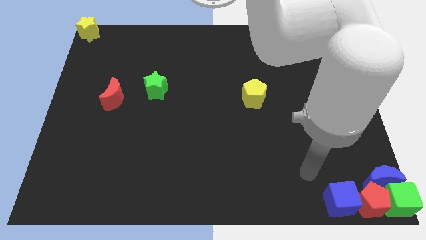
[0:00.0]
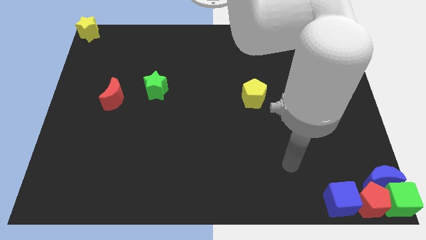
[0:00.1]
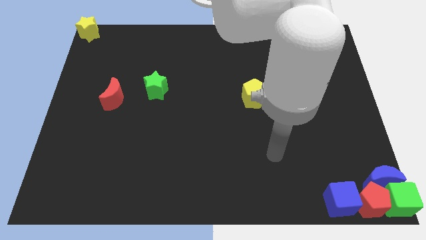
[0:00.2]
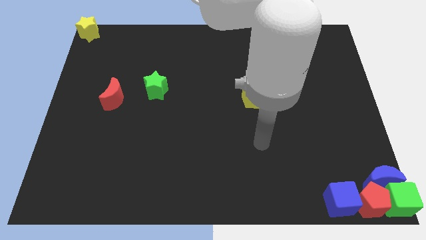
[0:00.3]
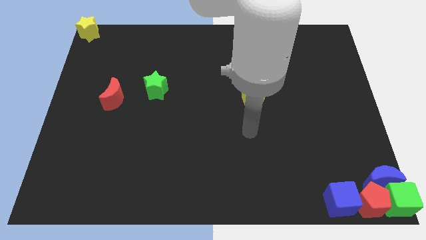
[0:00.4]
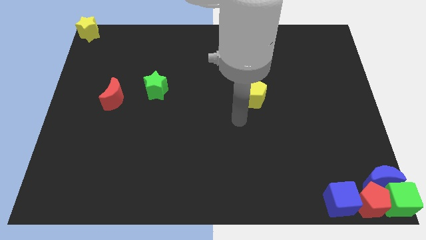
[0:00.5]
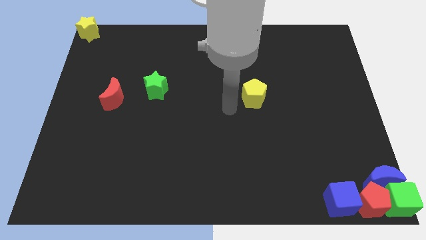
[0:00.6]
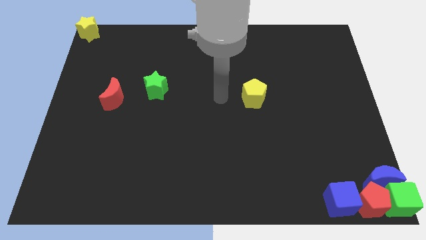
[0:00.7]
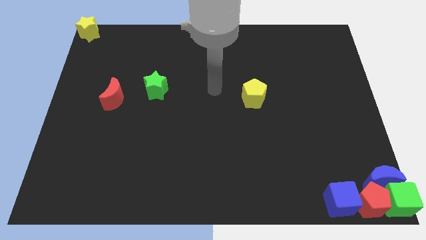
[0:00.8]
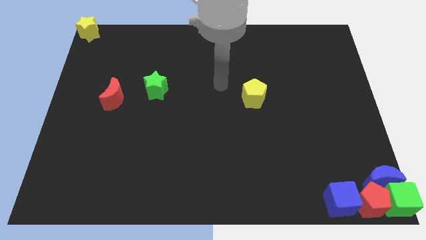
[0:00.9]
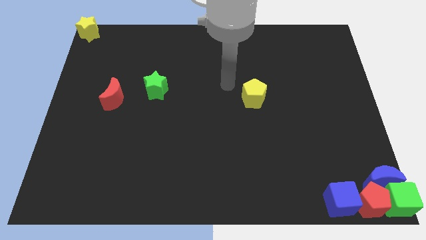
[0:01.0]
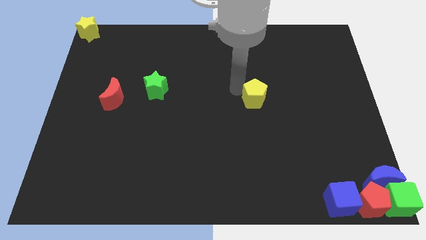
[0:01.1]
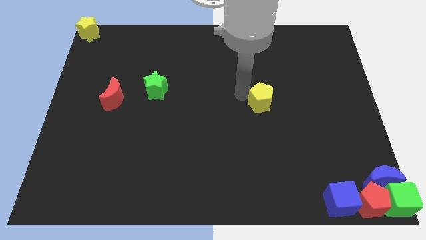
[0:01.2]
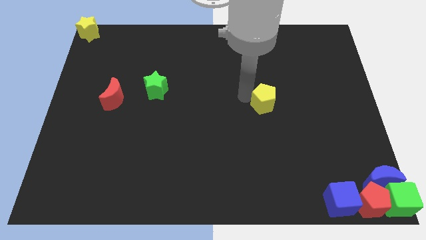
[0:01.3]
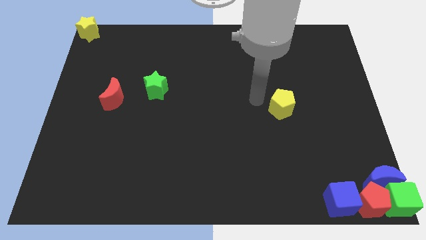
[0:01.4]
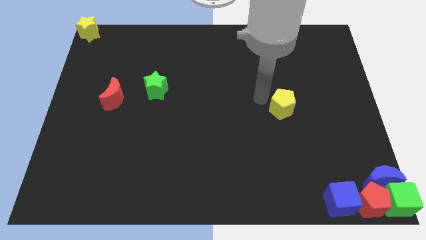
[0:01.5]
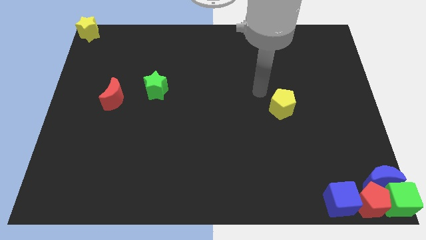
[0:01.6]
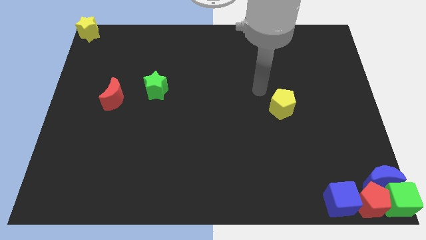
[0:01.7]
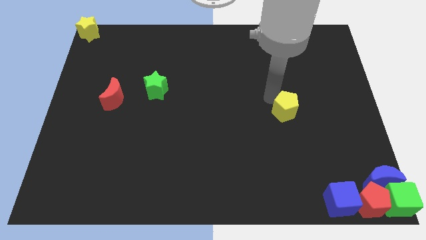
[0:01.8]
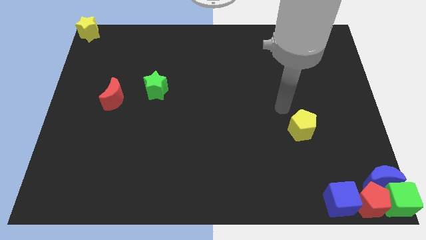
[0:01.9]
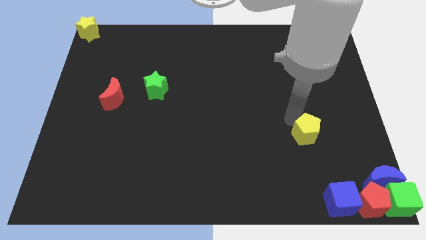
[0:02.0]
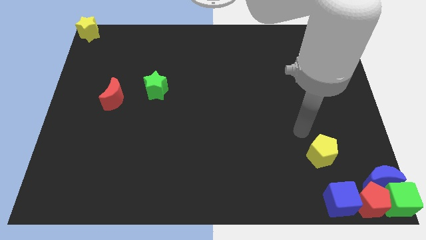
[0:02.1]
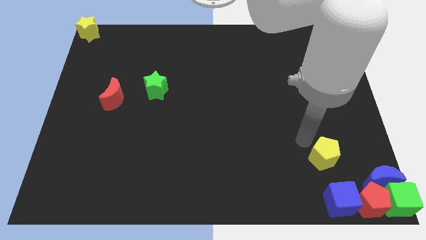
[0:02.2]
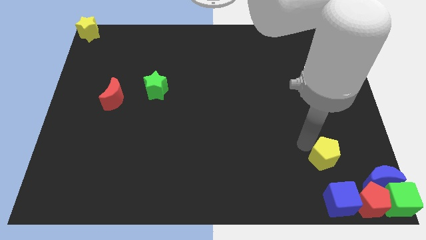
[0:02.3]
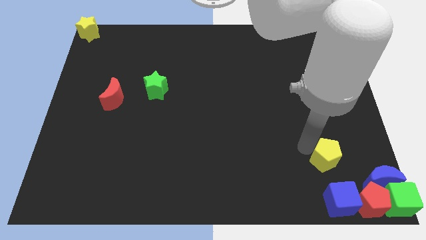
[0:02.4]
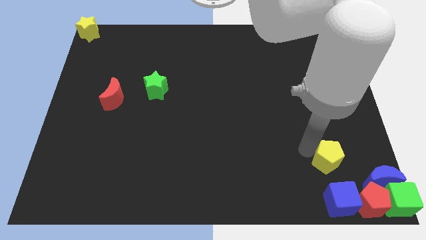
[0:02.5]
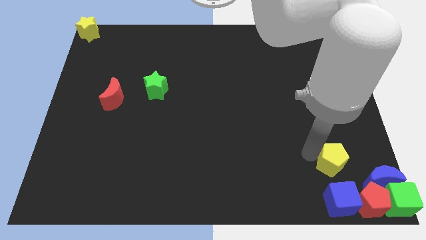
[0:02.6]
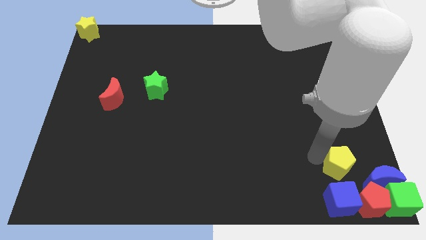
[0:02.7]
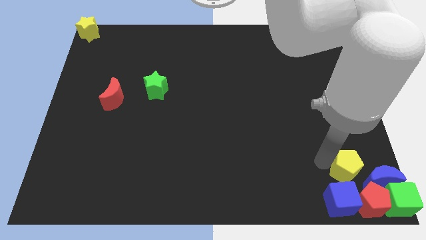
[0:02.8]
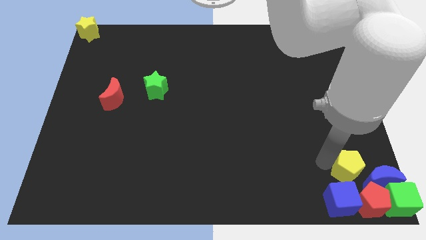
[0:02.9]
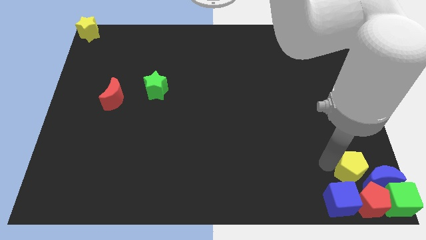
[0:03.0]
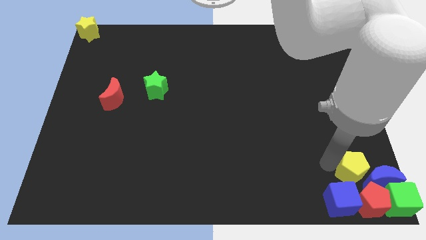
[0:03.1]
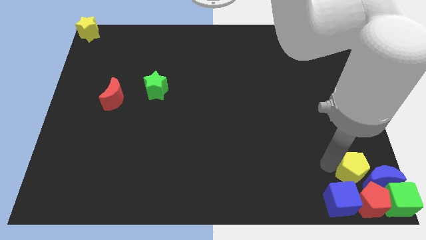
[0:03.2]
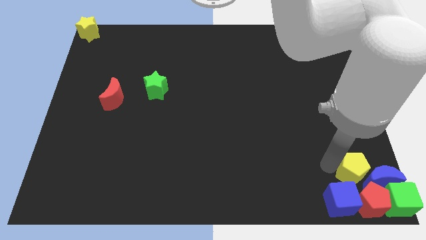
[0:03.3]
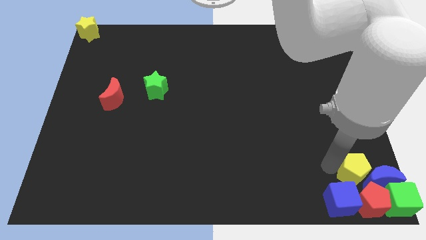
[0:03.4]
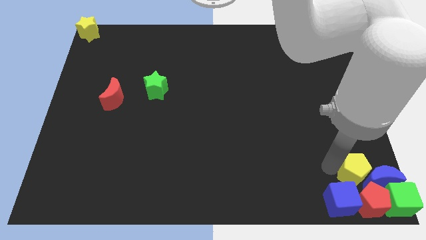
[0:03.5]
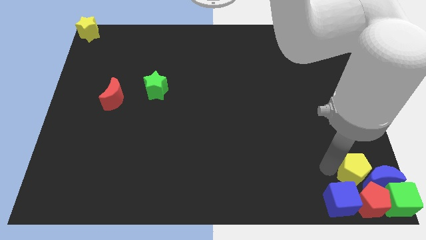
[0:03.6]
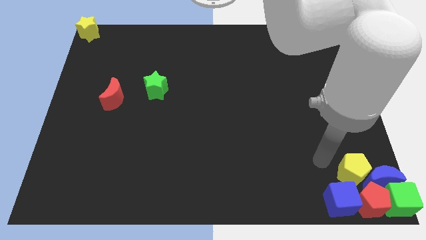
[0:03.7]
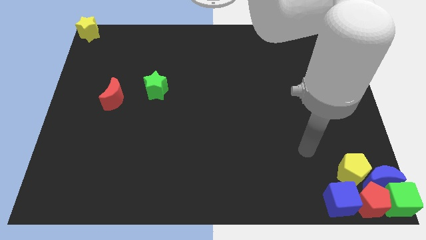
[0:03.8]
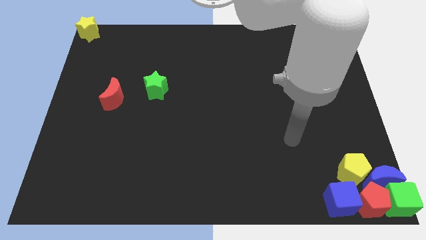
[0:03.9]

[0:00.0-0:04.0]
place the yellow pentagon to the top right side of the blue cube

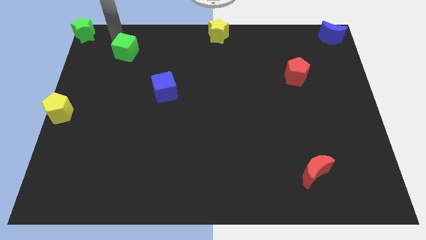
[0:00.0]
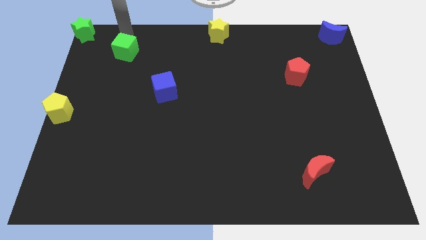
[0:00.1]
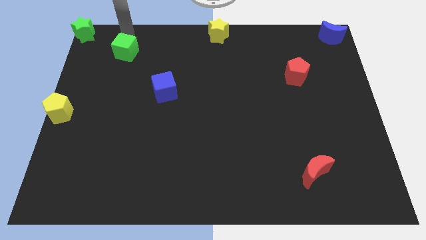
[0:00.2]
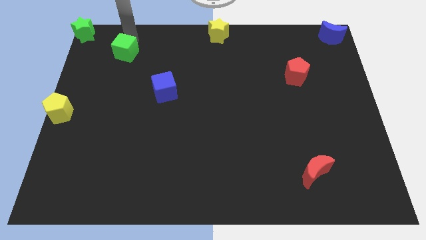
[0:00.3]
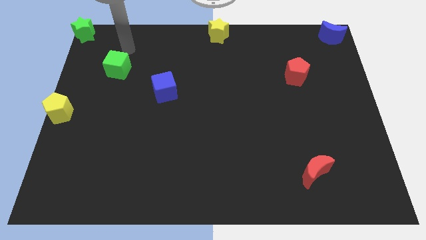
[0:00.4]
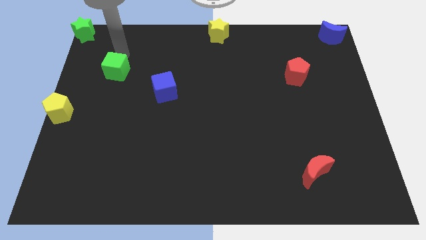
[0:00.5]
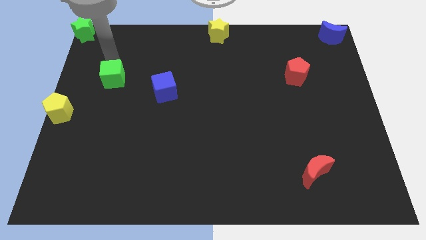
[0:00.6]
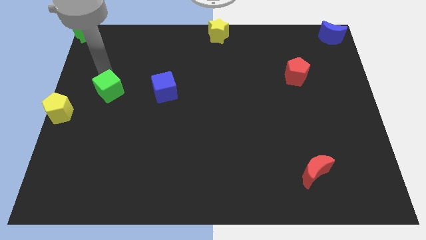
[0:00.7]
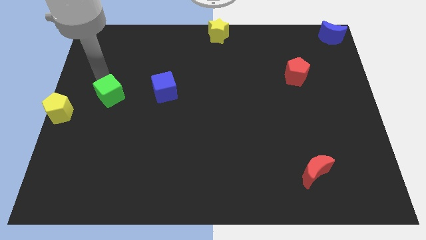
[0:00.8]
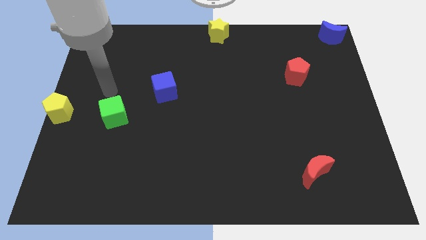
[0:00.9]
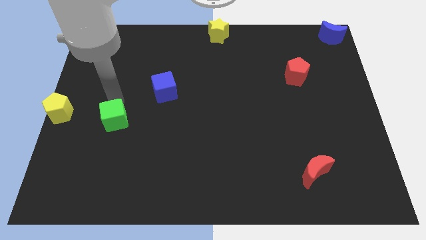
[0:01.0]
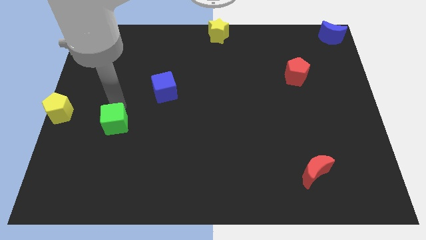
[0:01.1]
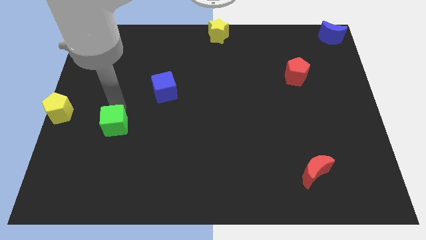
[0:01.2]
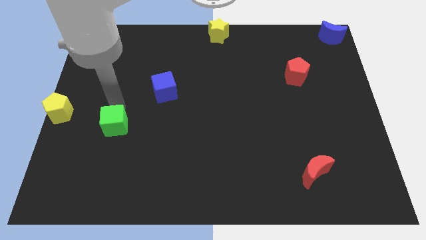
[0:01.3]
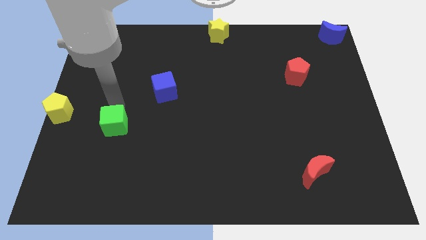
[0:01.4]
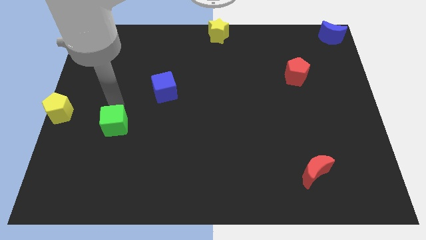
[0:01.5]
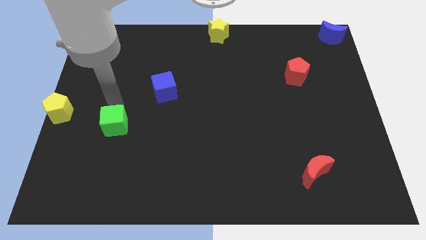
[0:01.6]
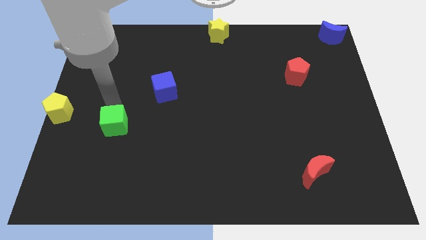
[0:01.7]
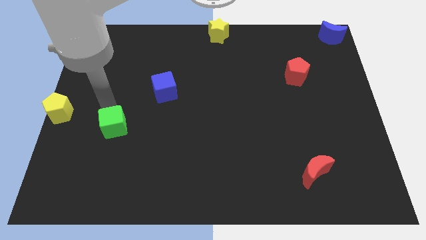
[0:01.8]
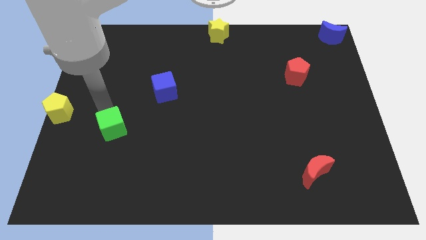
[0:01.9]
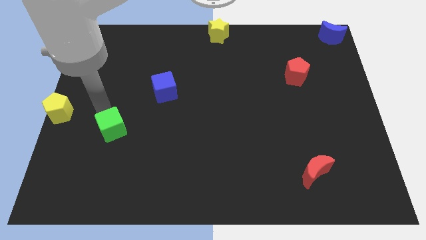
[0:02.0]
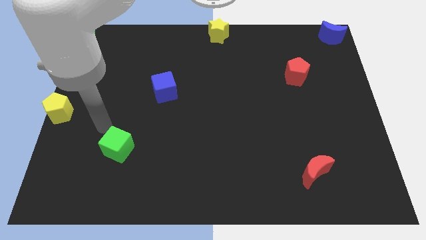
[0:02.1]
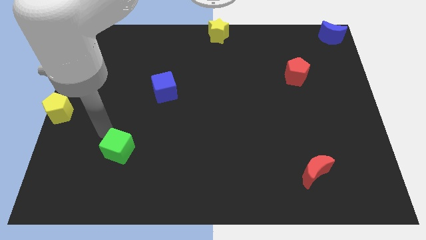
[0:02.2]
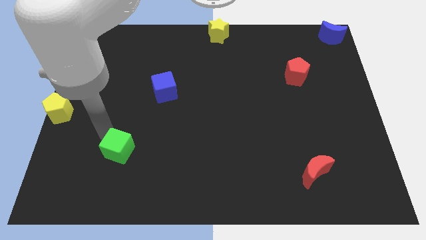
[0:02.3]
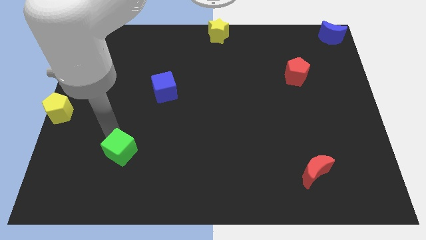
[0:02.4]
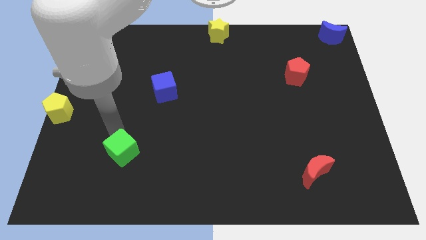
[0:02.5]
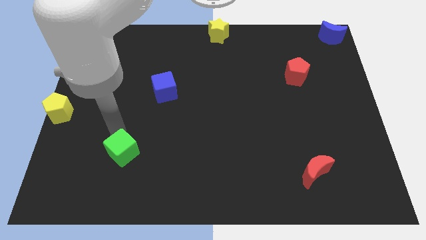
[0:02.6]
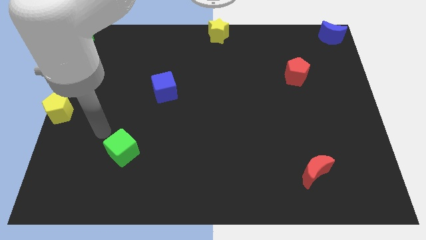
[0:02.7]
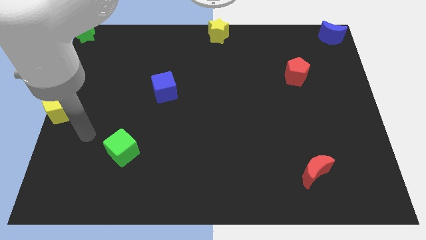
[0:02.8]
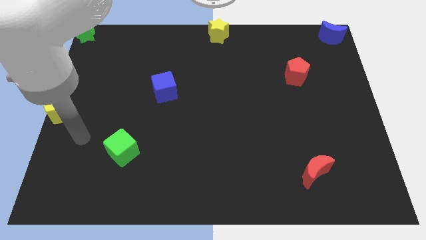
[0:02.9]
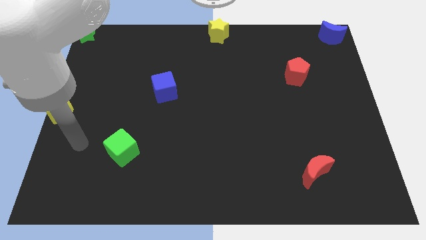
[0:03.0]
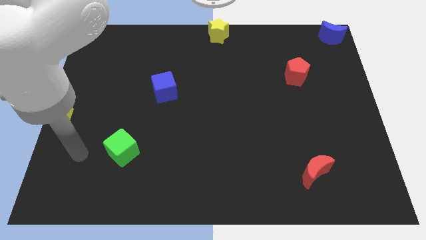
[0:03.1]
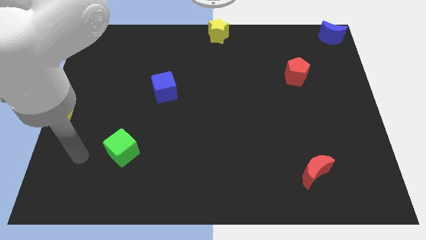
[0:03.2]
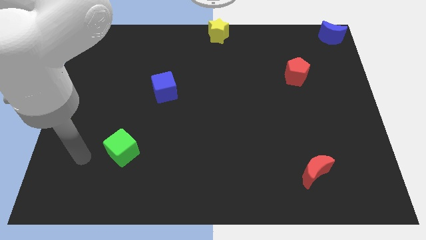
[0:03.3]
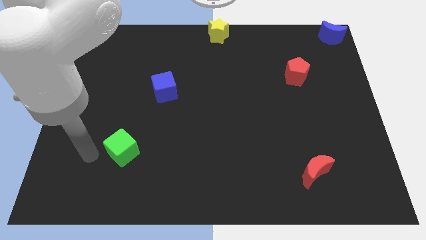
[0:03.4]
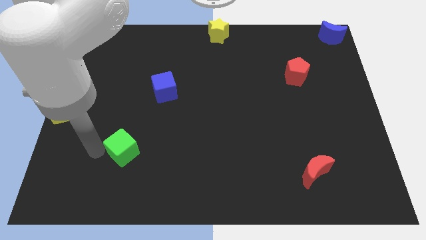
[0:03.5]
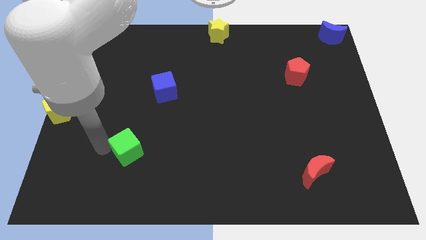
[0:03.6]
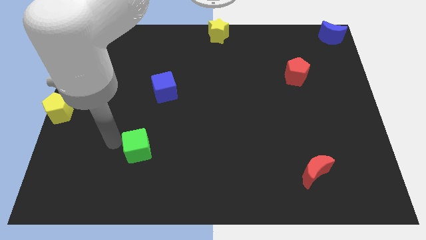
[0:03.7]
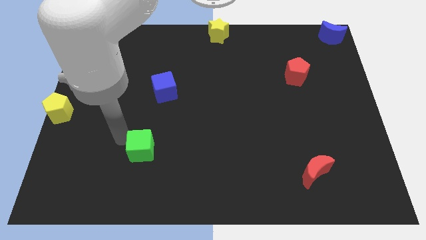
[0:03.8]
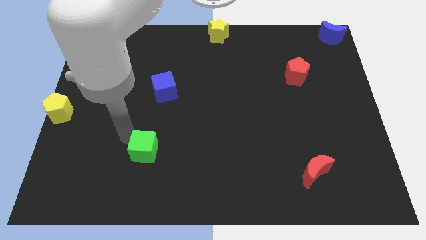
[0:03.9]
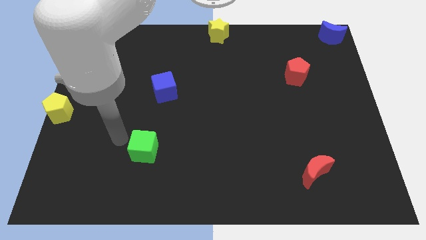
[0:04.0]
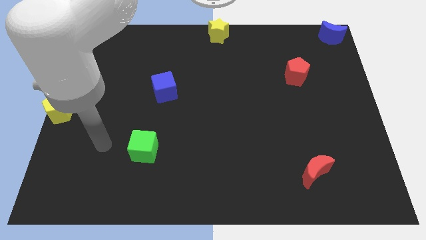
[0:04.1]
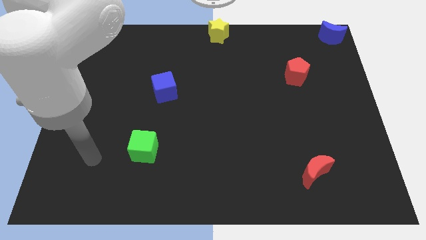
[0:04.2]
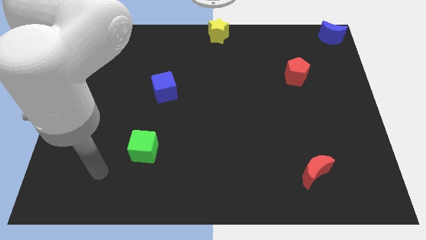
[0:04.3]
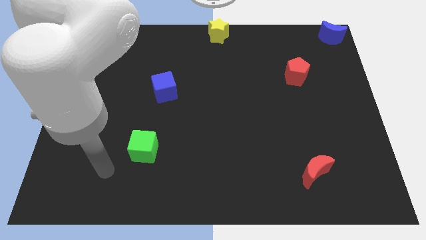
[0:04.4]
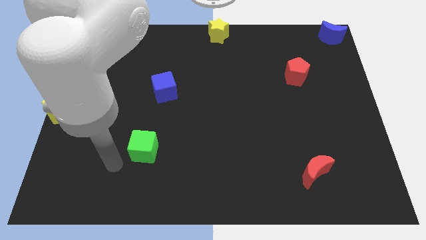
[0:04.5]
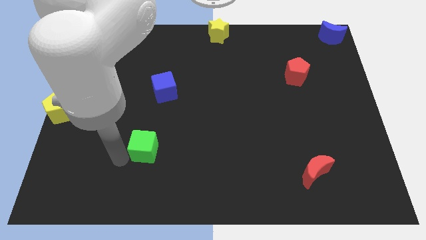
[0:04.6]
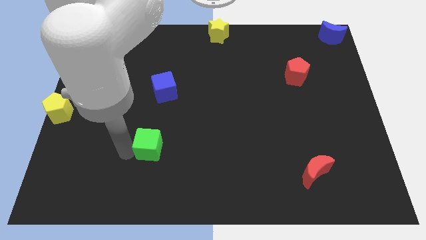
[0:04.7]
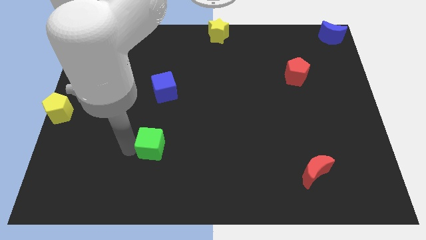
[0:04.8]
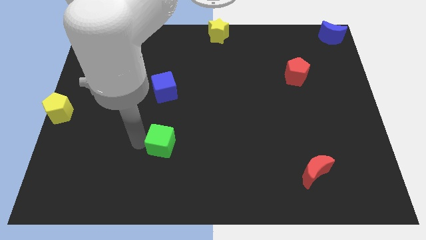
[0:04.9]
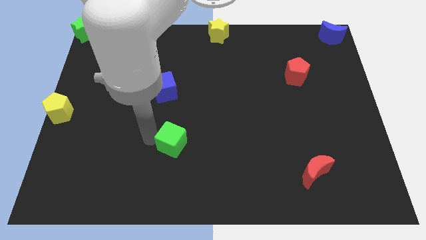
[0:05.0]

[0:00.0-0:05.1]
place green cube below blue cube
